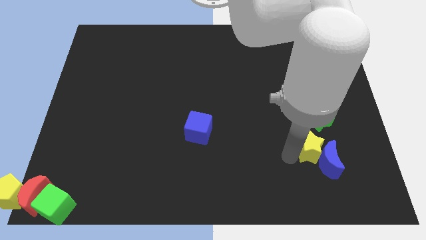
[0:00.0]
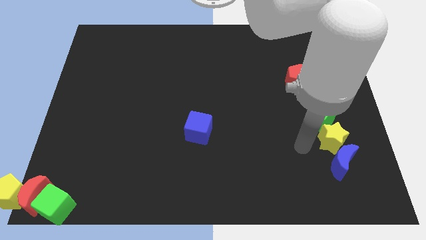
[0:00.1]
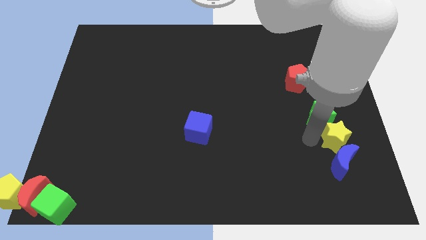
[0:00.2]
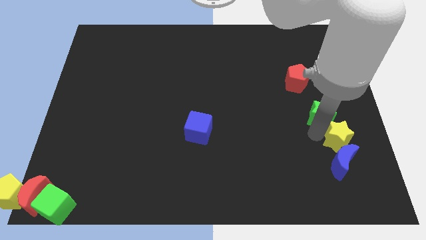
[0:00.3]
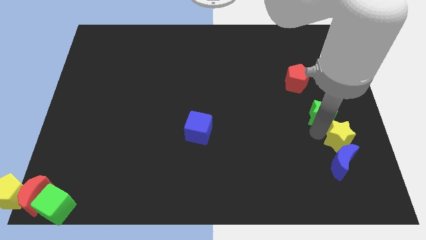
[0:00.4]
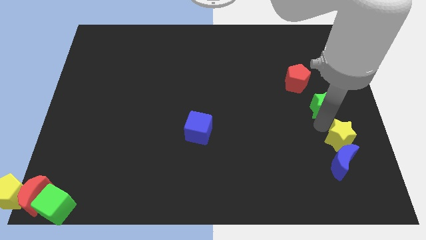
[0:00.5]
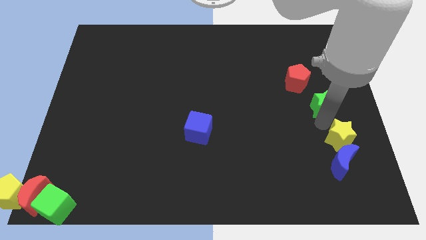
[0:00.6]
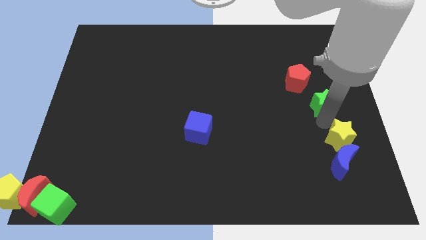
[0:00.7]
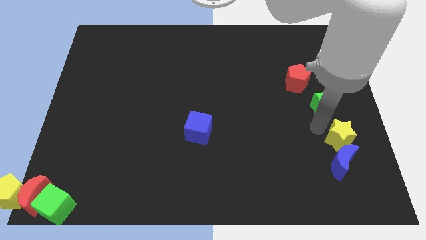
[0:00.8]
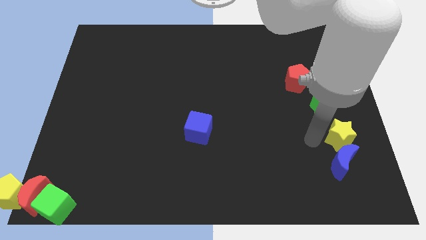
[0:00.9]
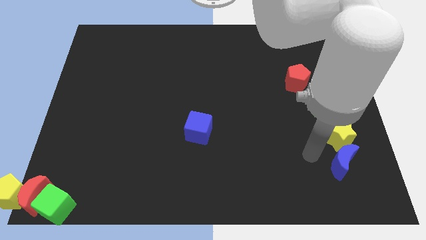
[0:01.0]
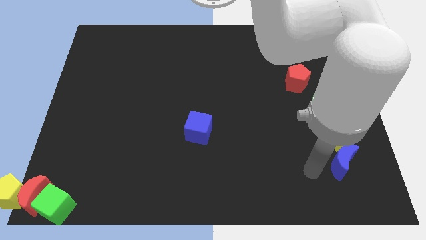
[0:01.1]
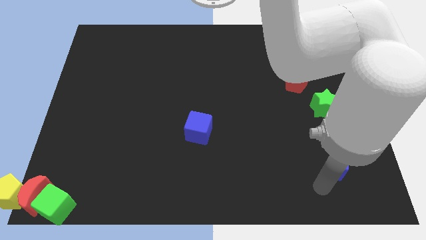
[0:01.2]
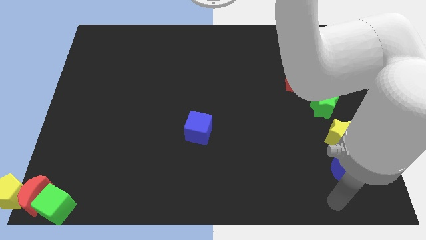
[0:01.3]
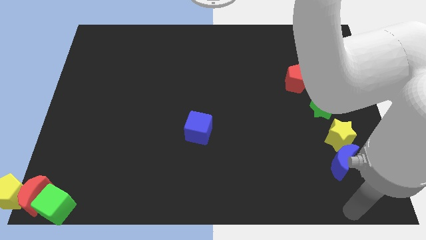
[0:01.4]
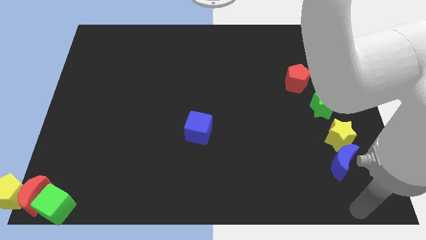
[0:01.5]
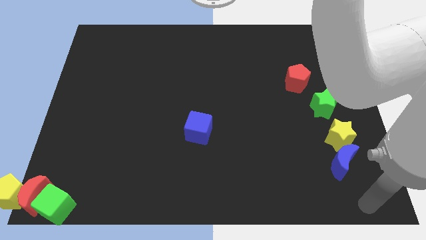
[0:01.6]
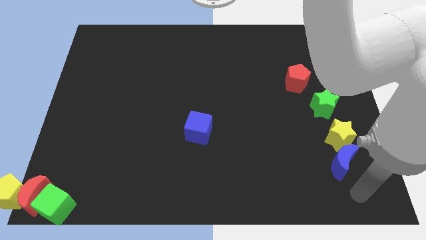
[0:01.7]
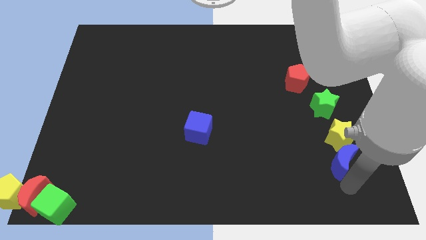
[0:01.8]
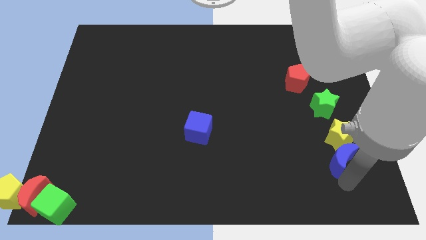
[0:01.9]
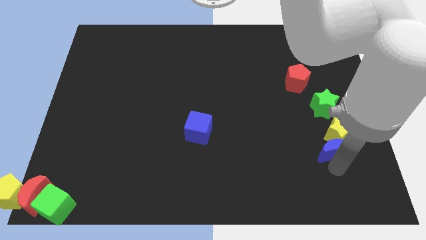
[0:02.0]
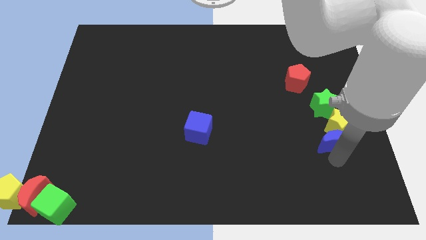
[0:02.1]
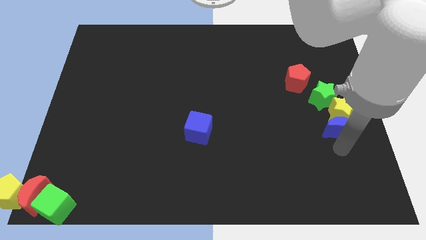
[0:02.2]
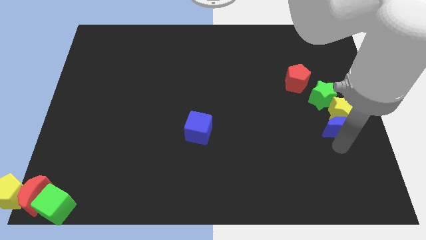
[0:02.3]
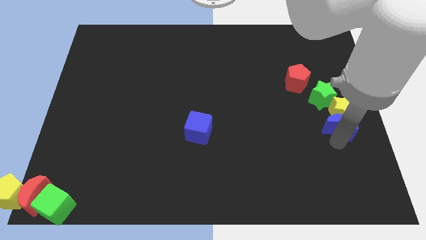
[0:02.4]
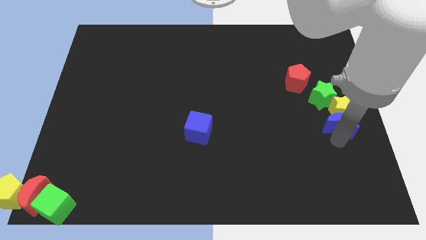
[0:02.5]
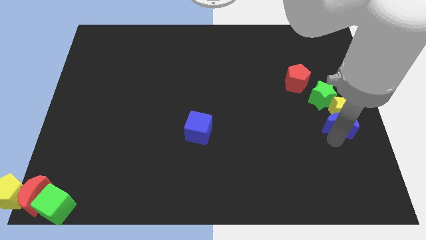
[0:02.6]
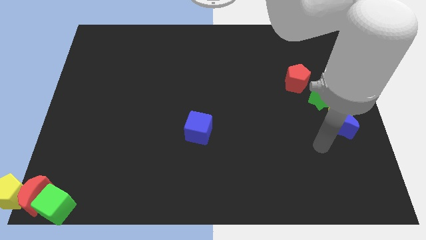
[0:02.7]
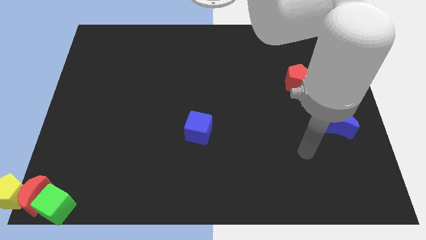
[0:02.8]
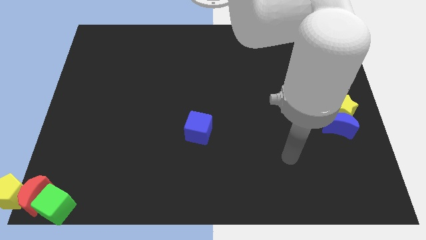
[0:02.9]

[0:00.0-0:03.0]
move the yellow star and the blue crescent into the green star

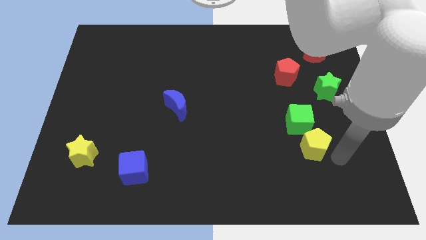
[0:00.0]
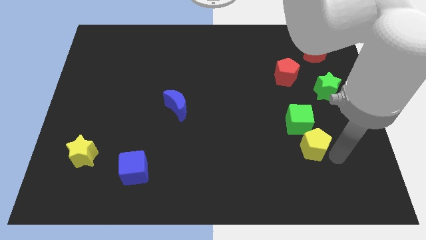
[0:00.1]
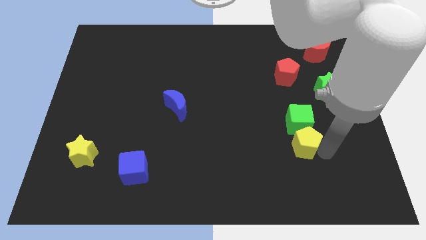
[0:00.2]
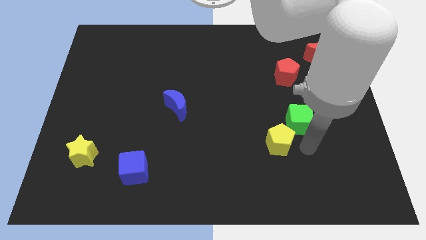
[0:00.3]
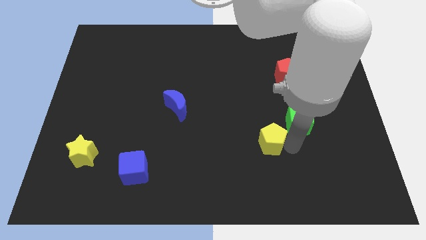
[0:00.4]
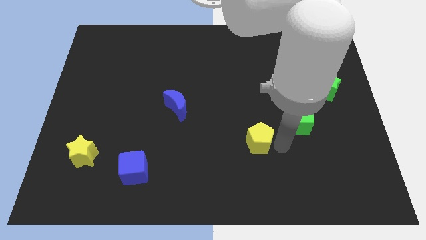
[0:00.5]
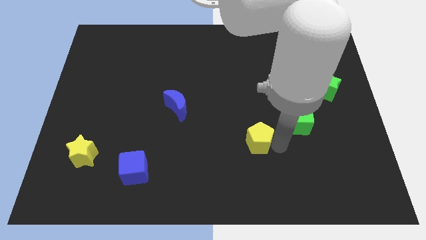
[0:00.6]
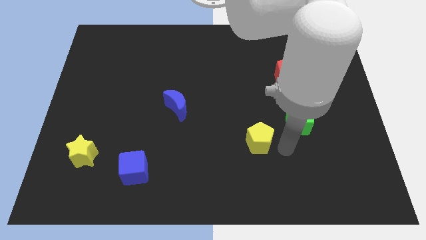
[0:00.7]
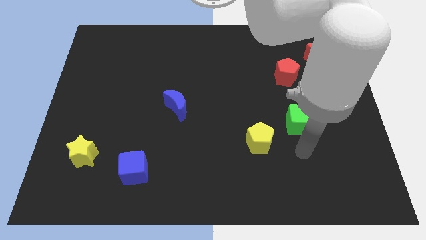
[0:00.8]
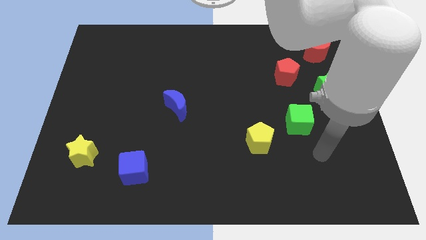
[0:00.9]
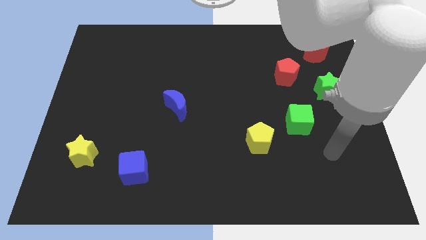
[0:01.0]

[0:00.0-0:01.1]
push the yellow pentagon towards the left side of the board

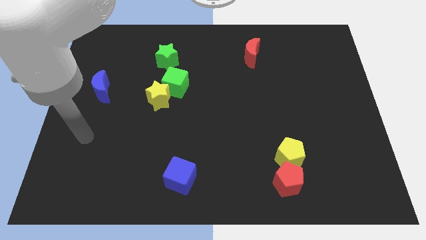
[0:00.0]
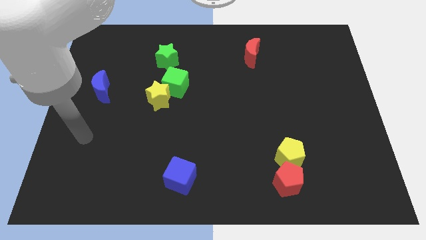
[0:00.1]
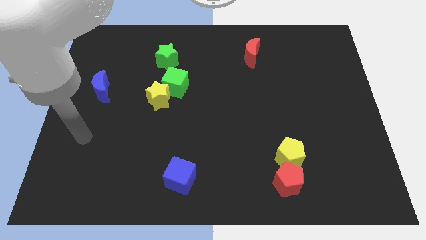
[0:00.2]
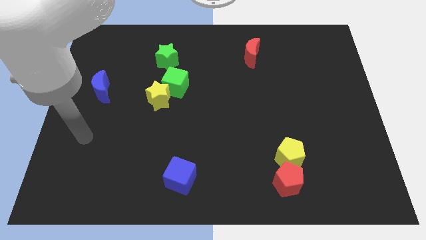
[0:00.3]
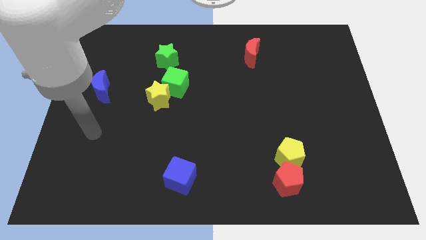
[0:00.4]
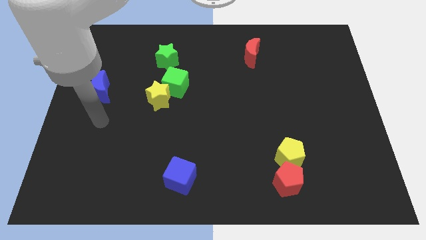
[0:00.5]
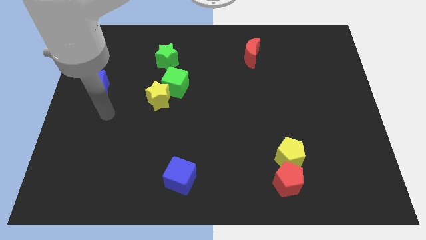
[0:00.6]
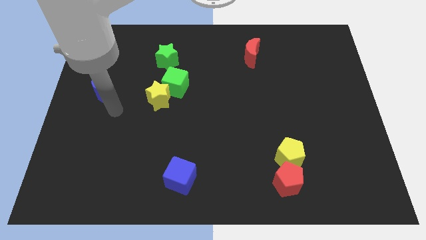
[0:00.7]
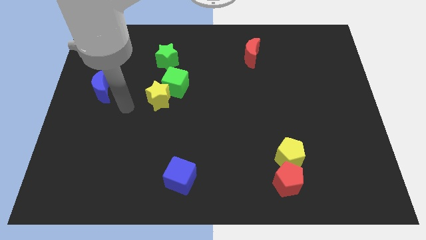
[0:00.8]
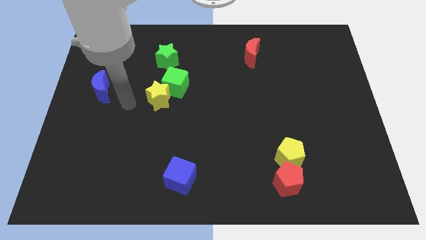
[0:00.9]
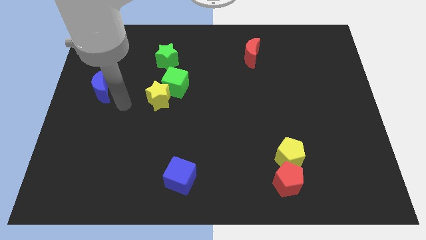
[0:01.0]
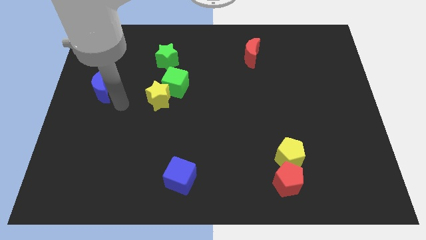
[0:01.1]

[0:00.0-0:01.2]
place your hand close to the blue crescent

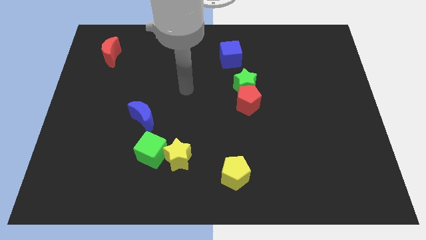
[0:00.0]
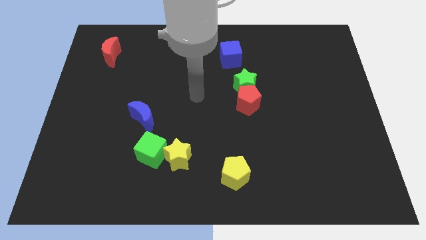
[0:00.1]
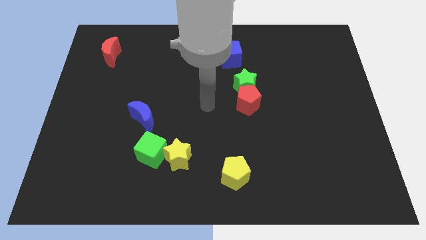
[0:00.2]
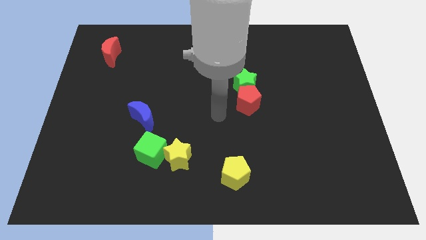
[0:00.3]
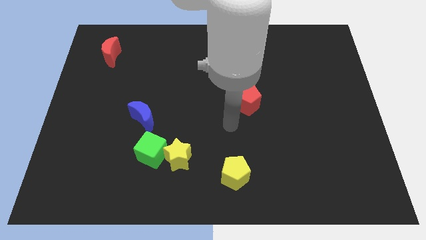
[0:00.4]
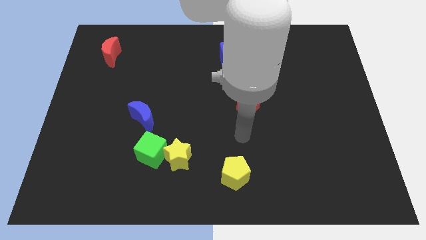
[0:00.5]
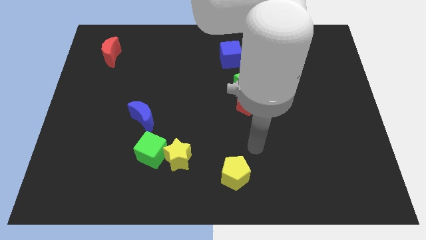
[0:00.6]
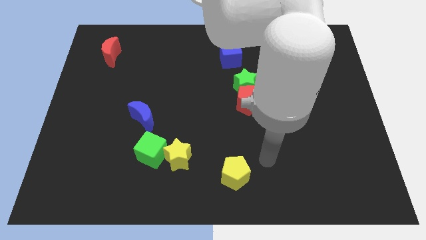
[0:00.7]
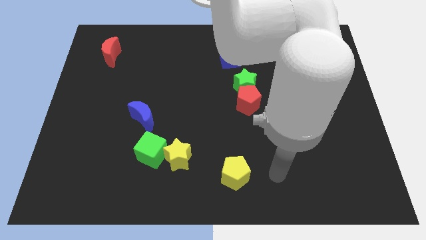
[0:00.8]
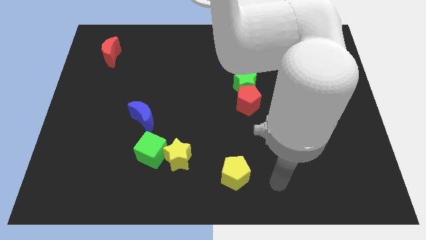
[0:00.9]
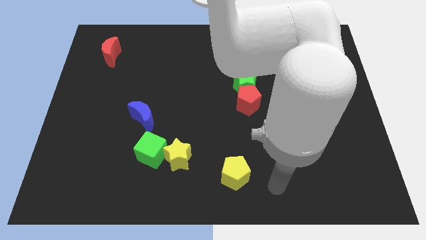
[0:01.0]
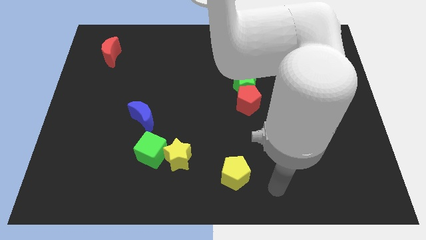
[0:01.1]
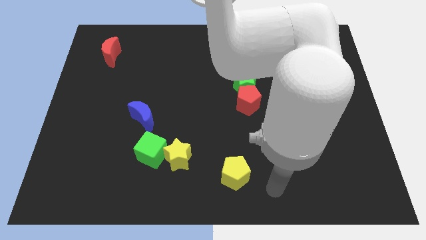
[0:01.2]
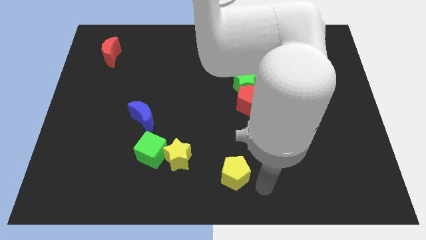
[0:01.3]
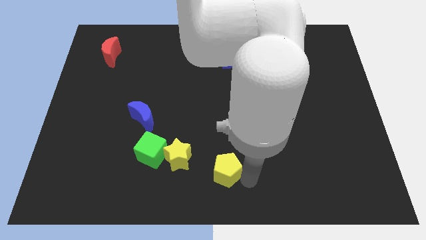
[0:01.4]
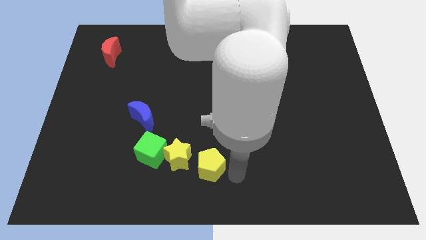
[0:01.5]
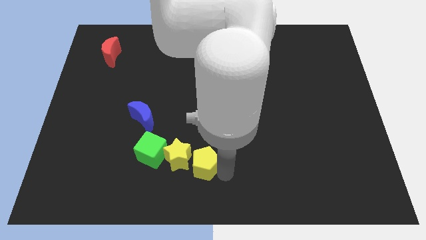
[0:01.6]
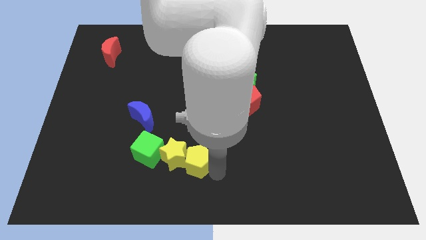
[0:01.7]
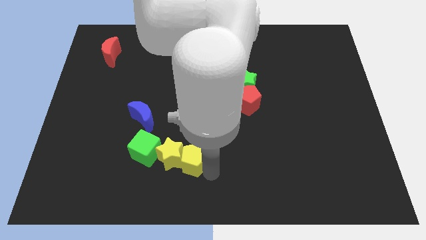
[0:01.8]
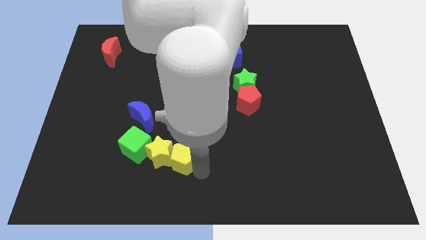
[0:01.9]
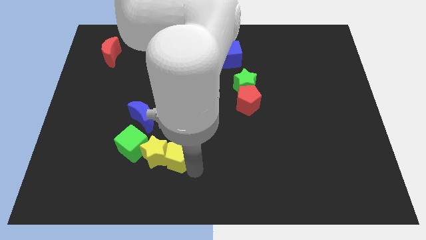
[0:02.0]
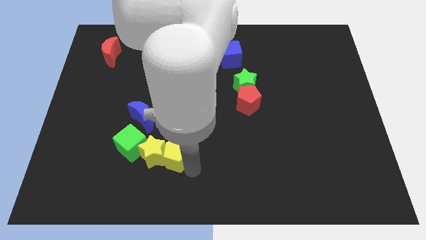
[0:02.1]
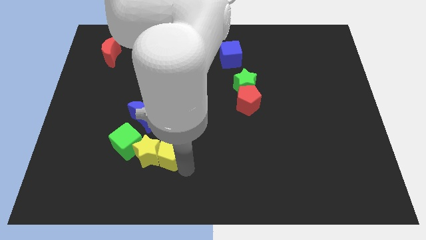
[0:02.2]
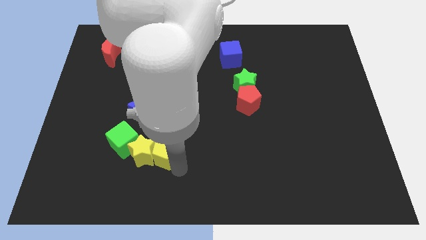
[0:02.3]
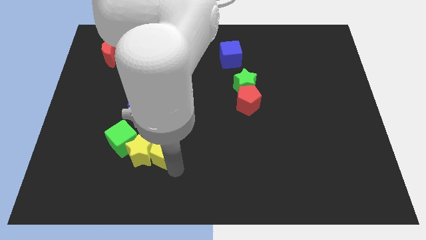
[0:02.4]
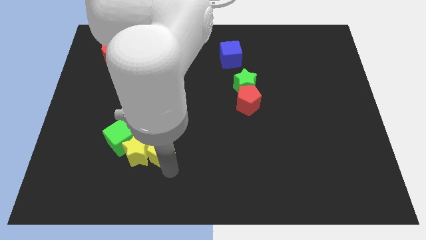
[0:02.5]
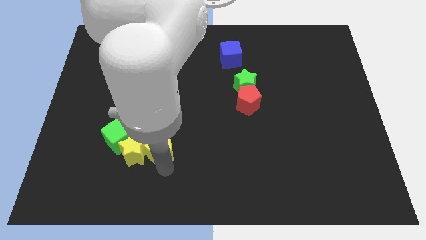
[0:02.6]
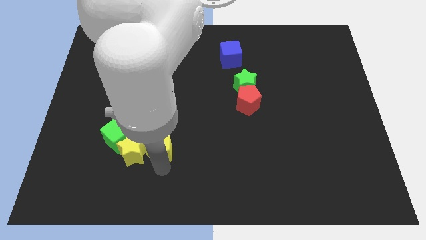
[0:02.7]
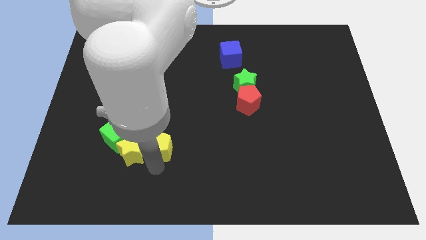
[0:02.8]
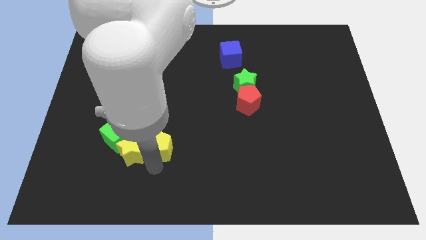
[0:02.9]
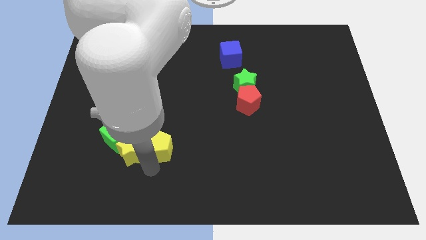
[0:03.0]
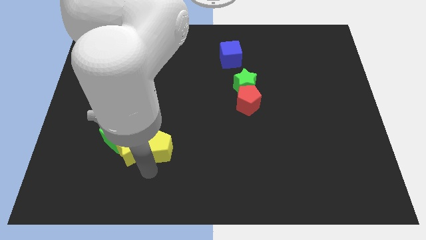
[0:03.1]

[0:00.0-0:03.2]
push the yellow pentagon into yellow star

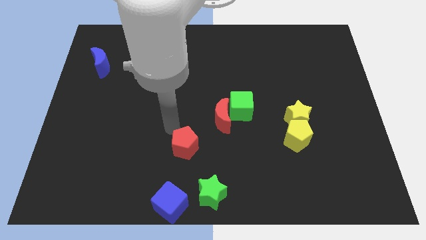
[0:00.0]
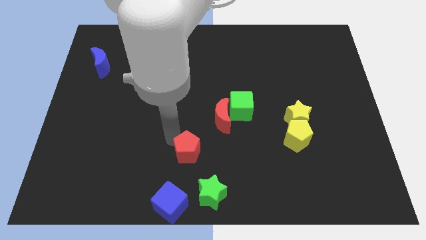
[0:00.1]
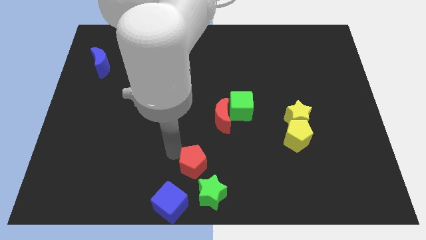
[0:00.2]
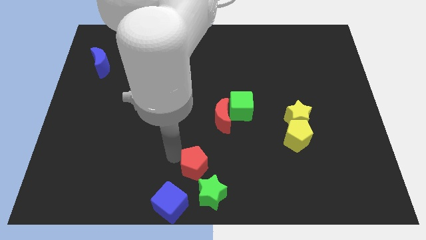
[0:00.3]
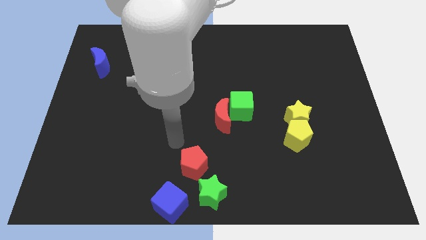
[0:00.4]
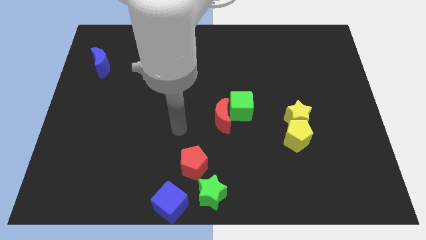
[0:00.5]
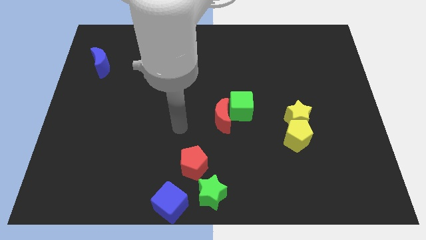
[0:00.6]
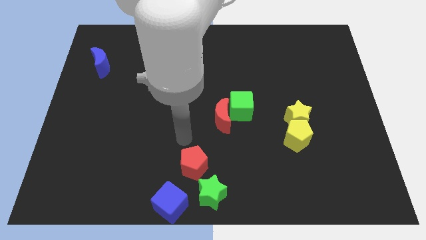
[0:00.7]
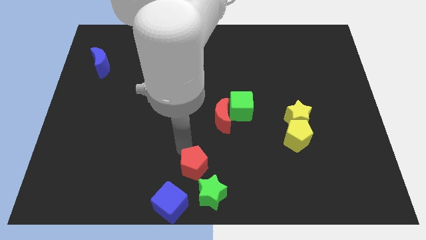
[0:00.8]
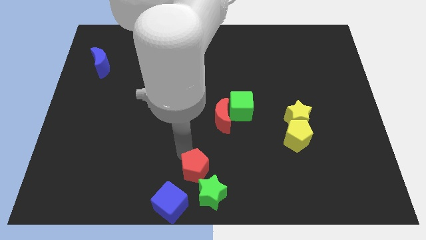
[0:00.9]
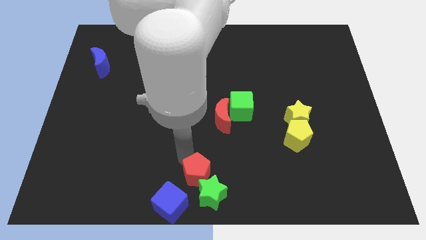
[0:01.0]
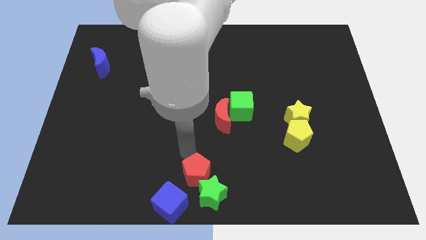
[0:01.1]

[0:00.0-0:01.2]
push the red pentagon to the left of the green star
